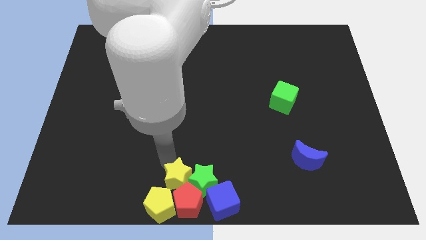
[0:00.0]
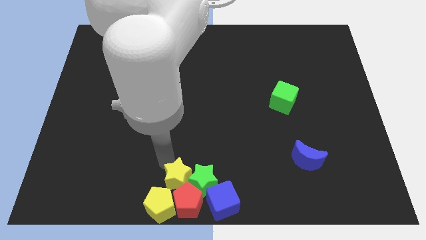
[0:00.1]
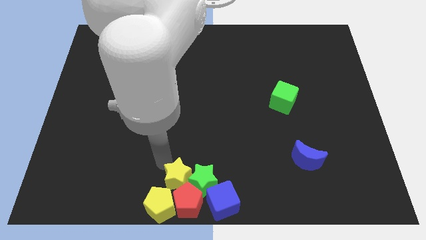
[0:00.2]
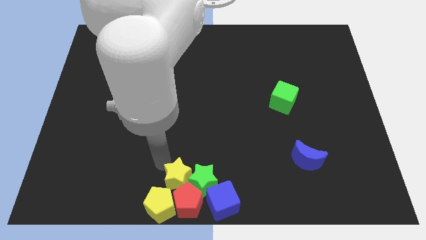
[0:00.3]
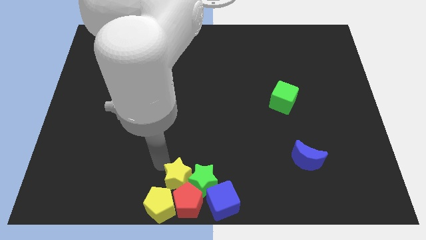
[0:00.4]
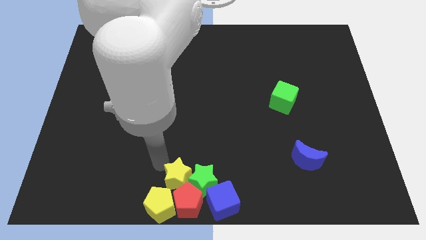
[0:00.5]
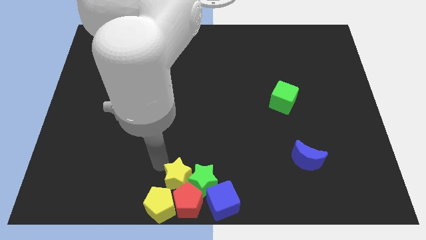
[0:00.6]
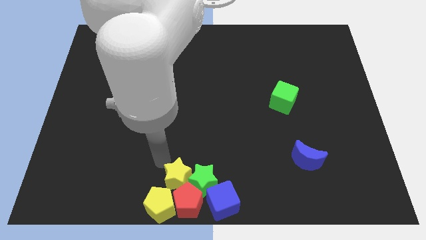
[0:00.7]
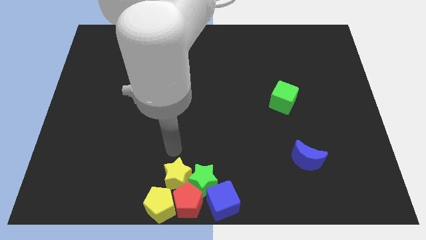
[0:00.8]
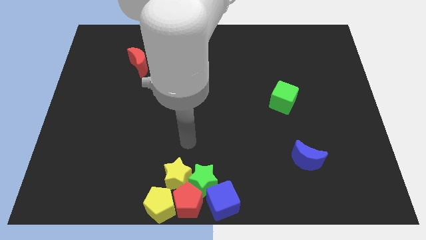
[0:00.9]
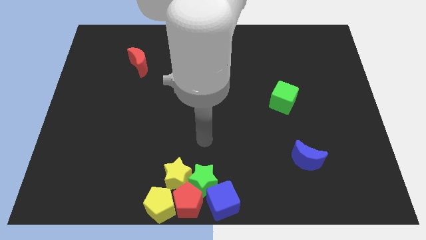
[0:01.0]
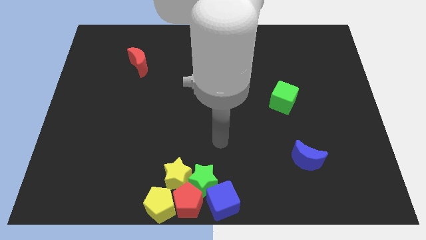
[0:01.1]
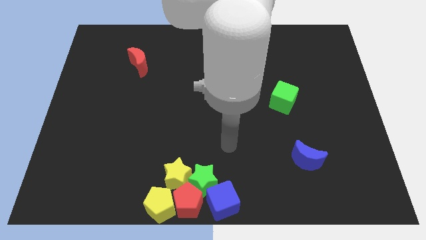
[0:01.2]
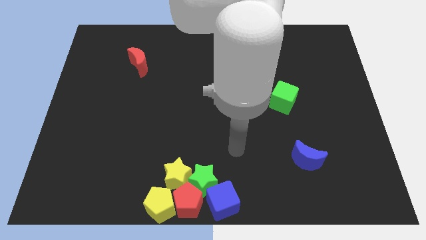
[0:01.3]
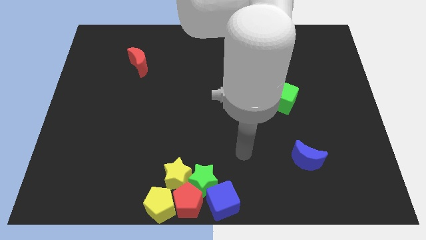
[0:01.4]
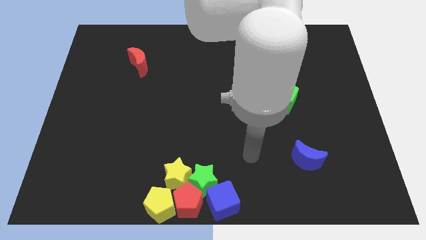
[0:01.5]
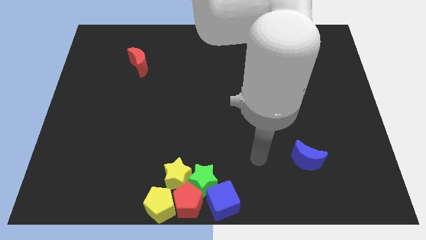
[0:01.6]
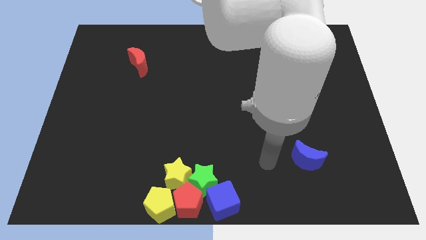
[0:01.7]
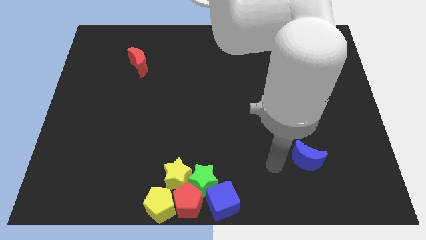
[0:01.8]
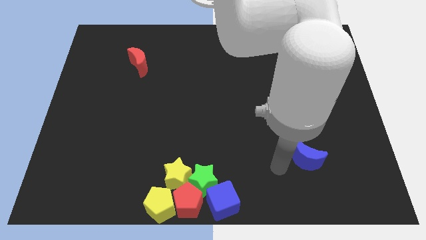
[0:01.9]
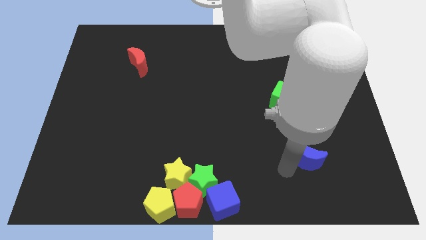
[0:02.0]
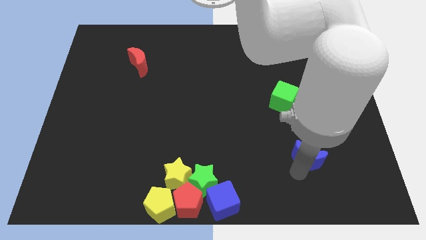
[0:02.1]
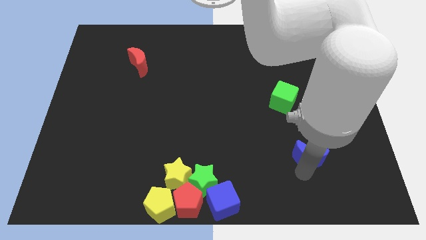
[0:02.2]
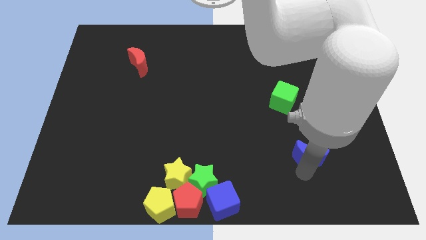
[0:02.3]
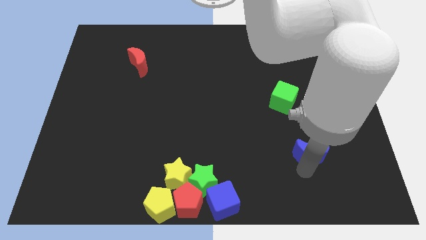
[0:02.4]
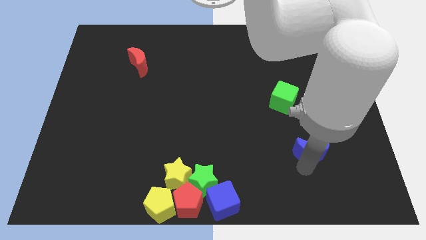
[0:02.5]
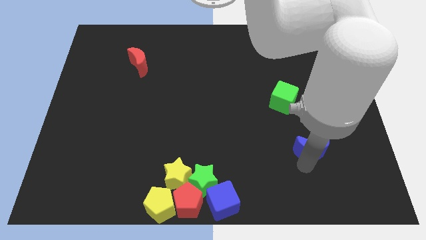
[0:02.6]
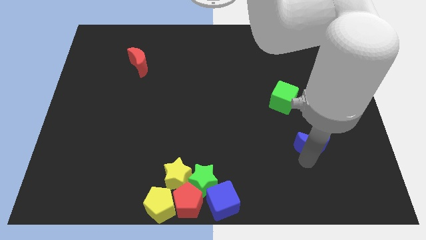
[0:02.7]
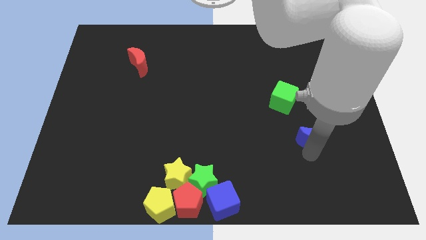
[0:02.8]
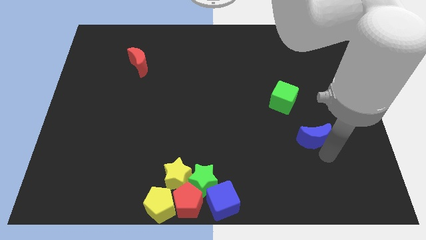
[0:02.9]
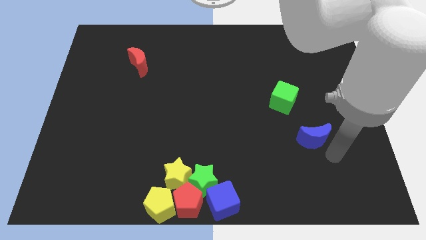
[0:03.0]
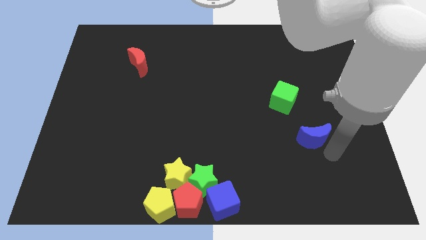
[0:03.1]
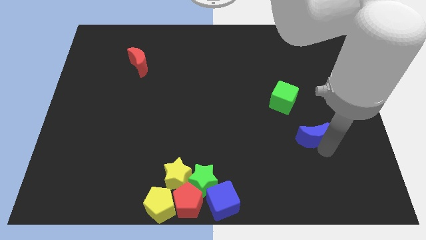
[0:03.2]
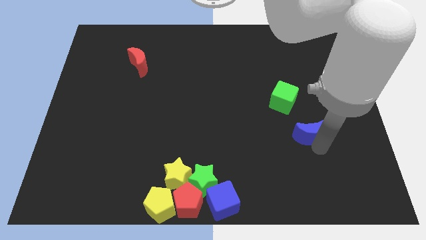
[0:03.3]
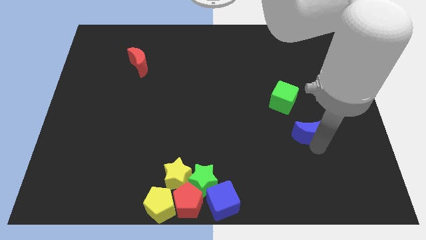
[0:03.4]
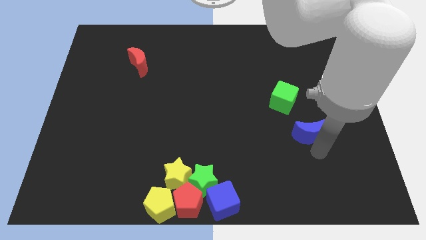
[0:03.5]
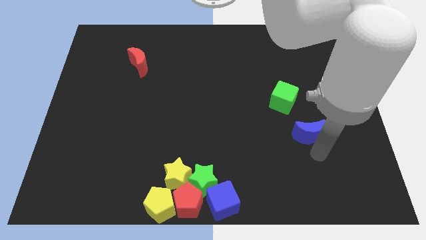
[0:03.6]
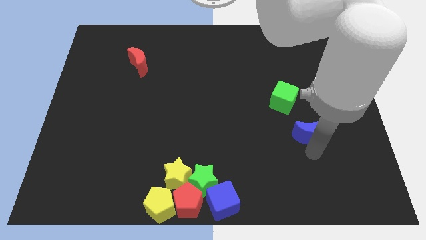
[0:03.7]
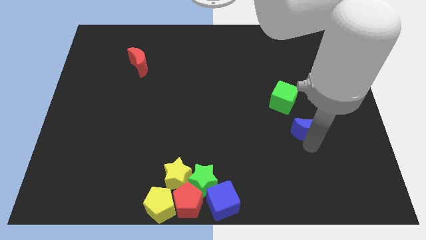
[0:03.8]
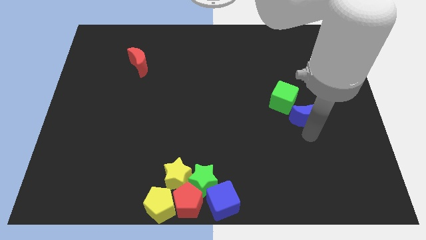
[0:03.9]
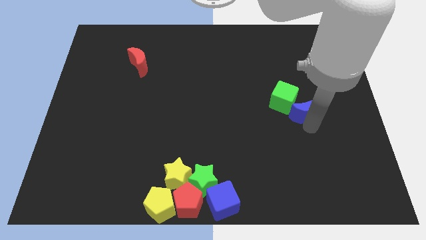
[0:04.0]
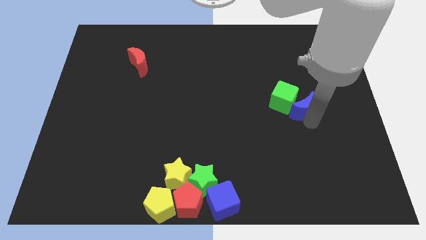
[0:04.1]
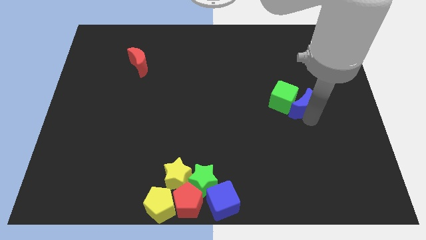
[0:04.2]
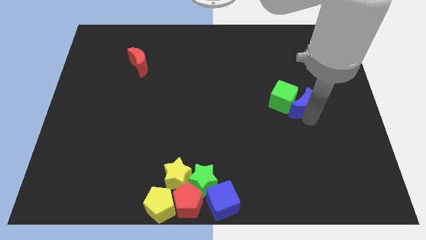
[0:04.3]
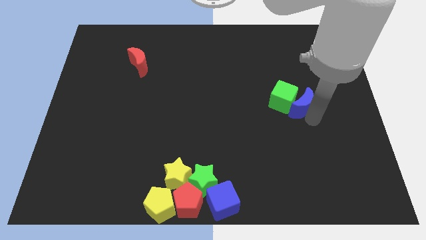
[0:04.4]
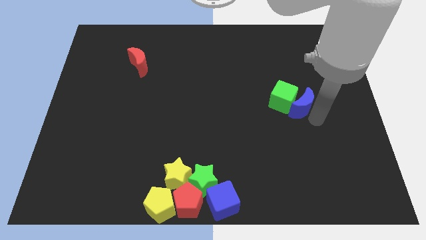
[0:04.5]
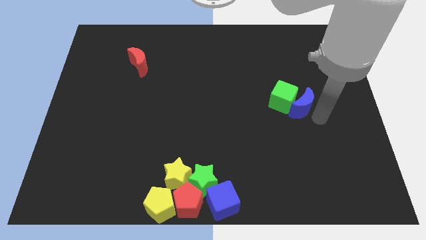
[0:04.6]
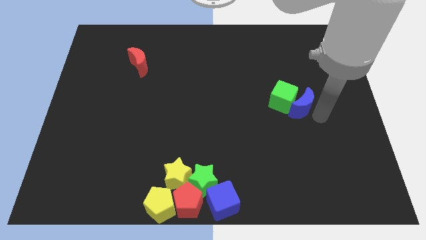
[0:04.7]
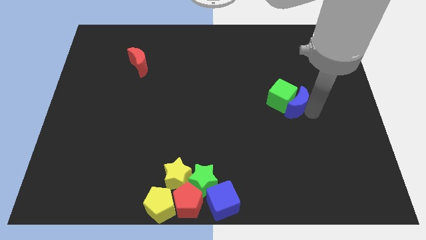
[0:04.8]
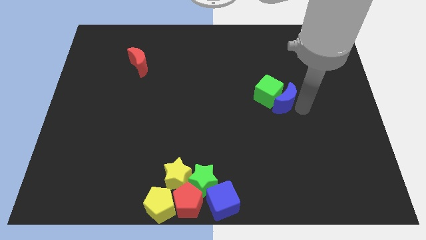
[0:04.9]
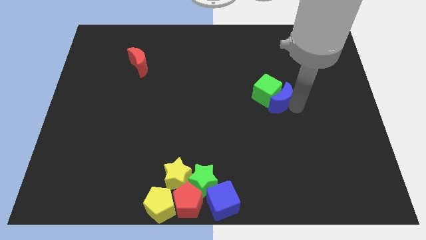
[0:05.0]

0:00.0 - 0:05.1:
move the blue moon and close to the green cube

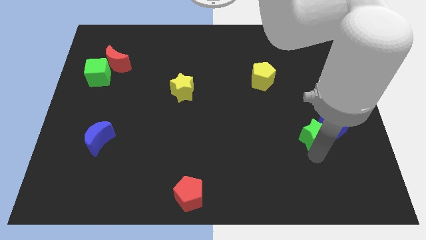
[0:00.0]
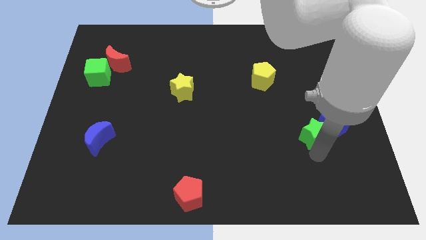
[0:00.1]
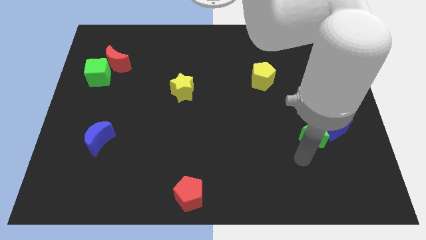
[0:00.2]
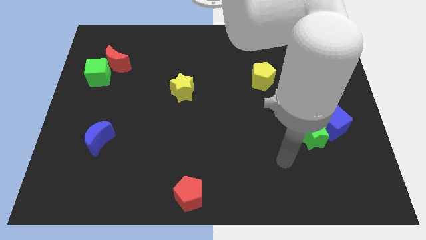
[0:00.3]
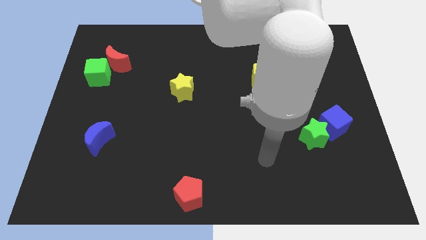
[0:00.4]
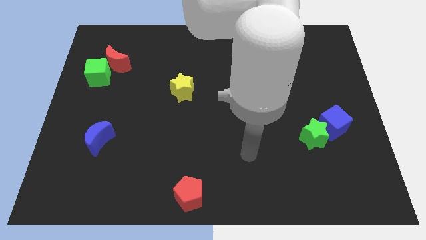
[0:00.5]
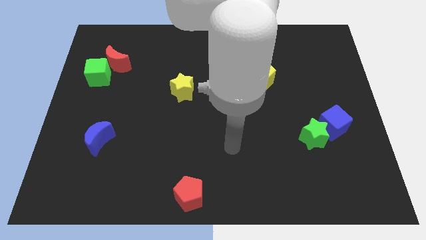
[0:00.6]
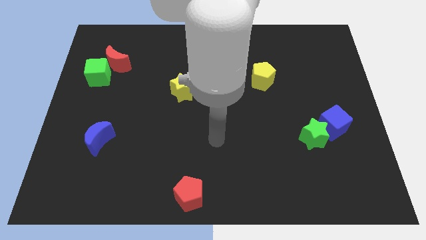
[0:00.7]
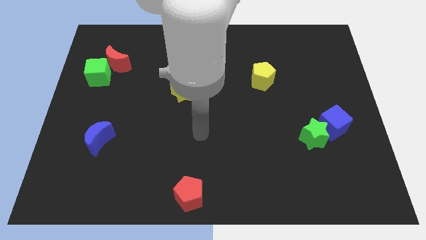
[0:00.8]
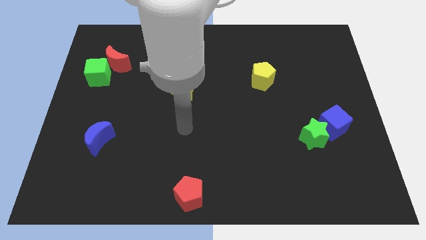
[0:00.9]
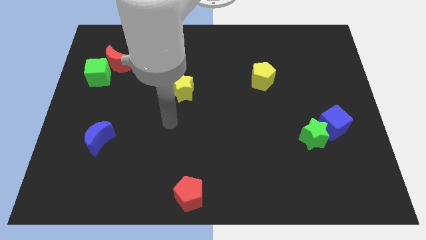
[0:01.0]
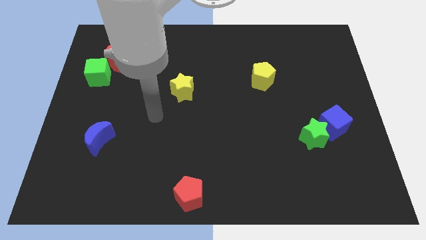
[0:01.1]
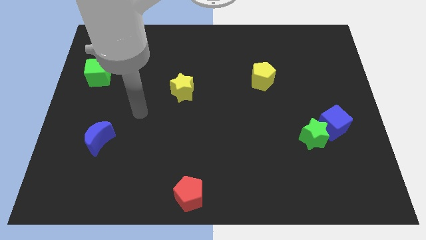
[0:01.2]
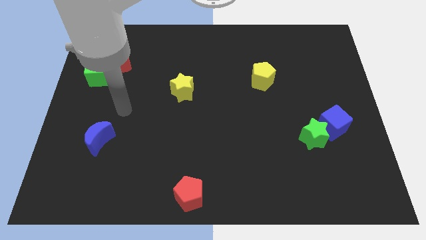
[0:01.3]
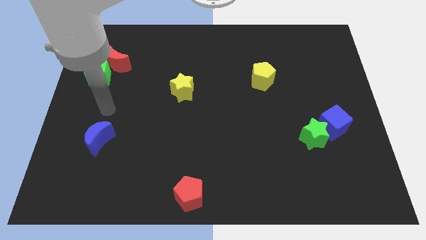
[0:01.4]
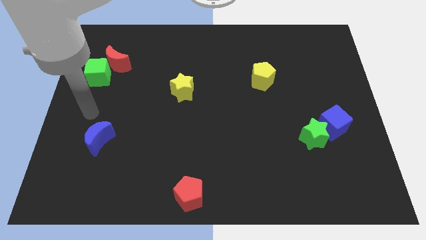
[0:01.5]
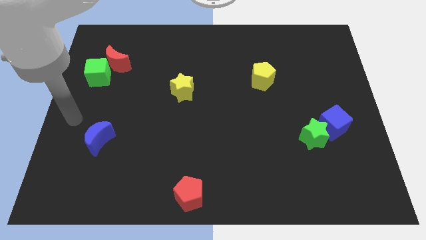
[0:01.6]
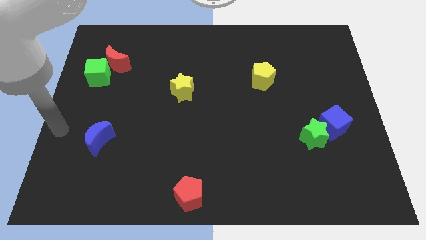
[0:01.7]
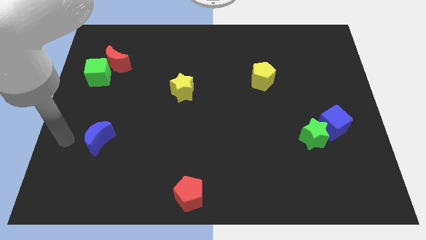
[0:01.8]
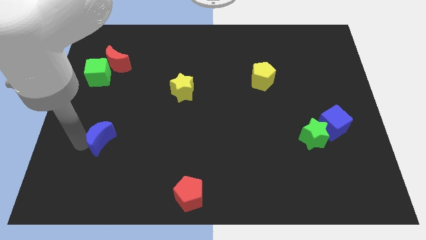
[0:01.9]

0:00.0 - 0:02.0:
move your arm away form the green star

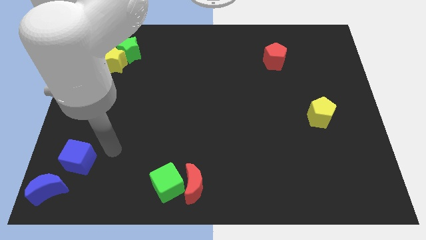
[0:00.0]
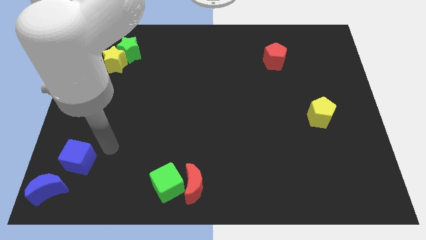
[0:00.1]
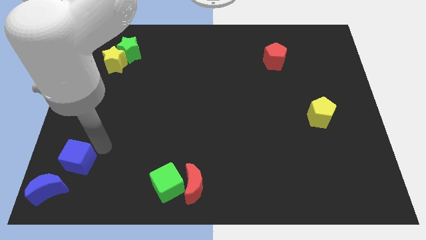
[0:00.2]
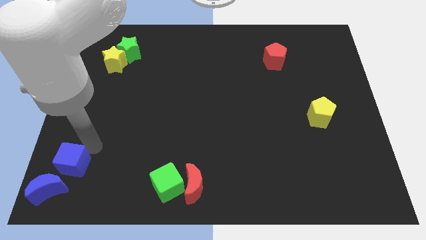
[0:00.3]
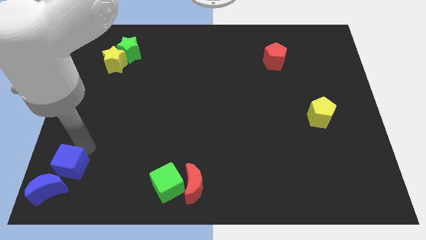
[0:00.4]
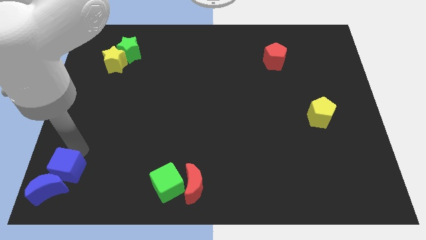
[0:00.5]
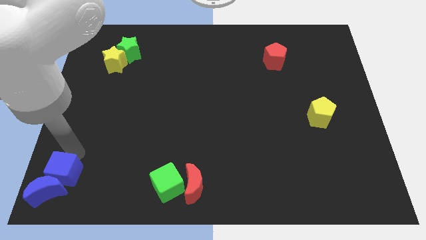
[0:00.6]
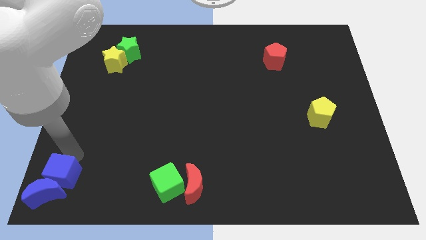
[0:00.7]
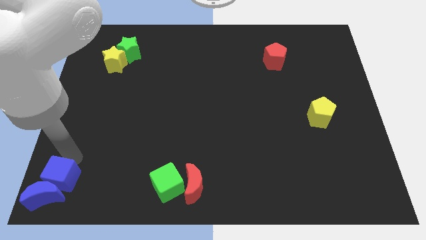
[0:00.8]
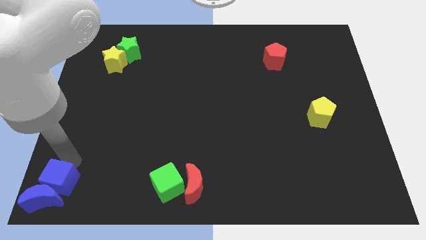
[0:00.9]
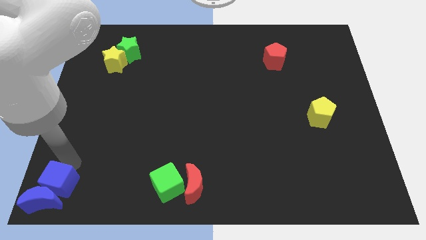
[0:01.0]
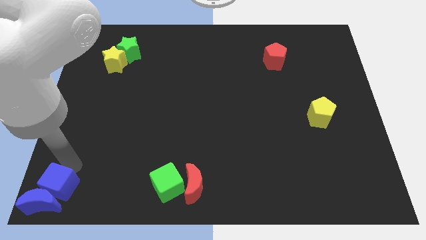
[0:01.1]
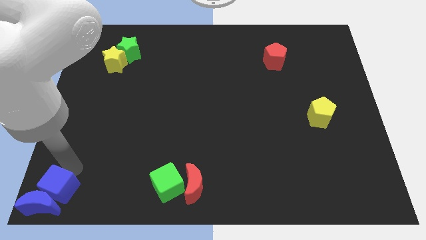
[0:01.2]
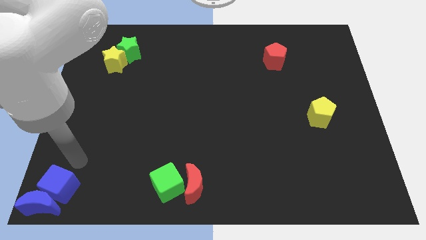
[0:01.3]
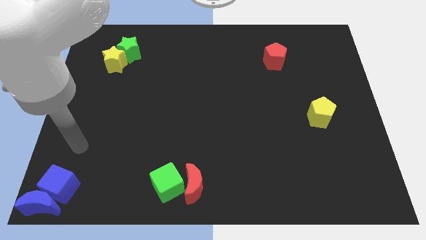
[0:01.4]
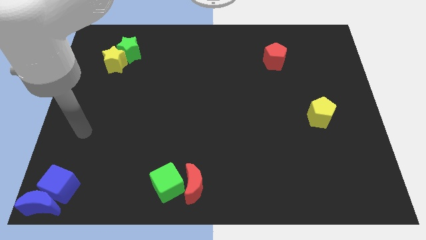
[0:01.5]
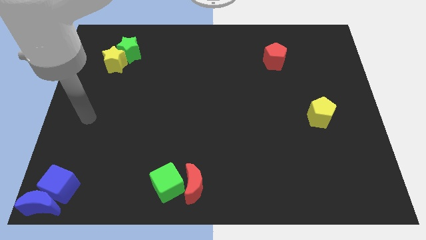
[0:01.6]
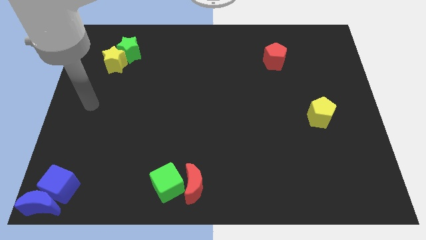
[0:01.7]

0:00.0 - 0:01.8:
put blue blocks together in the bottom left
